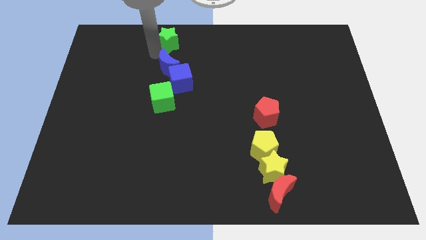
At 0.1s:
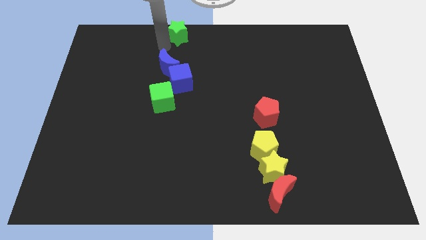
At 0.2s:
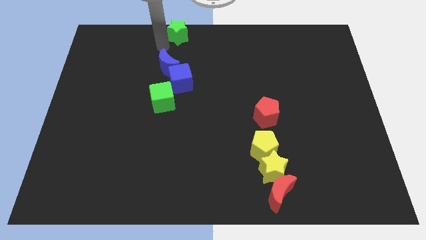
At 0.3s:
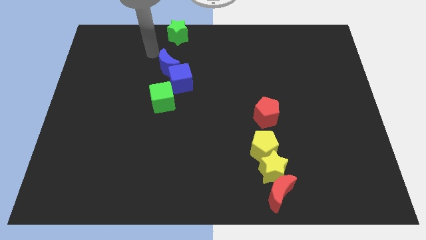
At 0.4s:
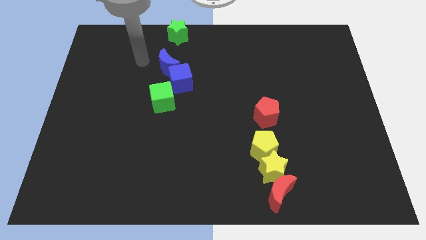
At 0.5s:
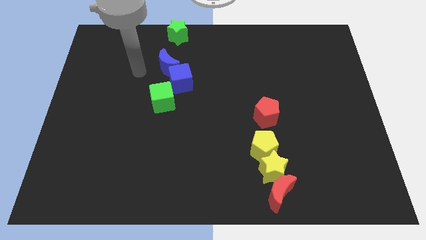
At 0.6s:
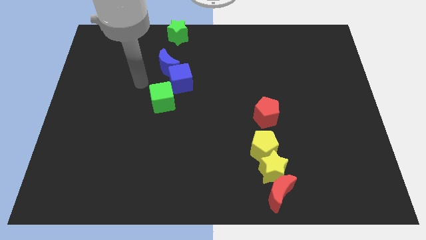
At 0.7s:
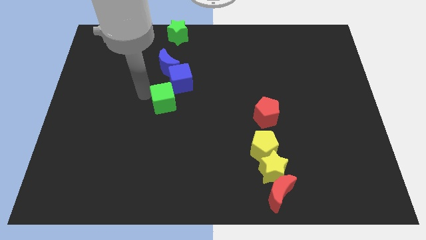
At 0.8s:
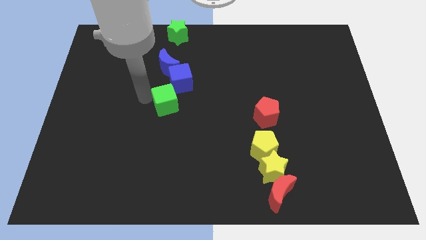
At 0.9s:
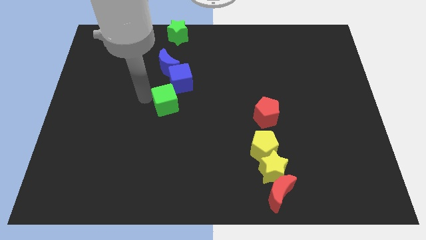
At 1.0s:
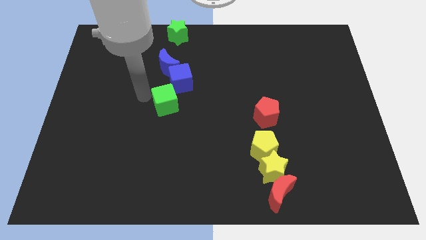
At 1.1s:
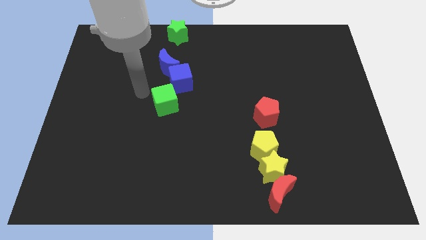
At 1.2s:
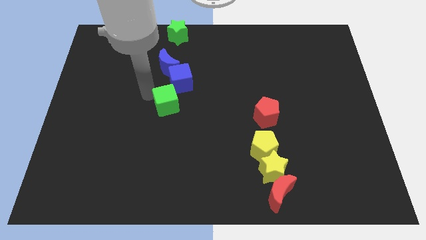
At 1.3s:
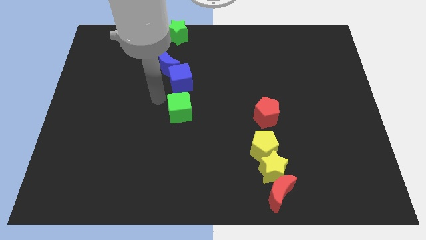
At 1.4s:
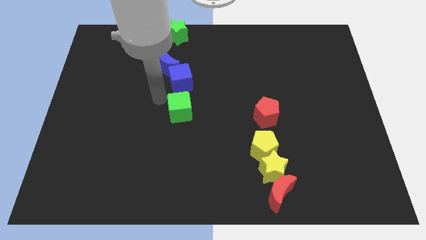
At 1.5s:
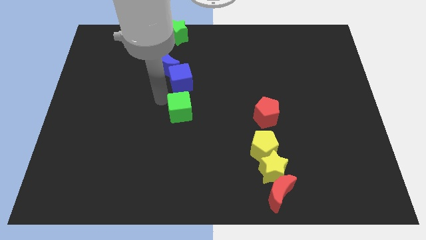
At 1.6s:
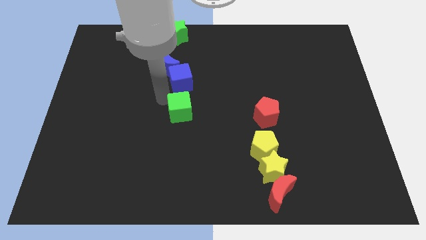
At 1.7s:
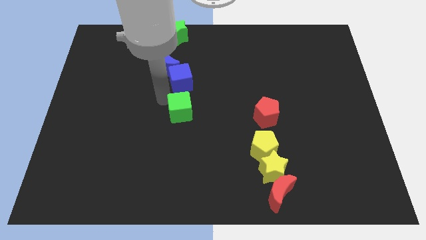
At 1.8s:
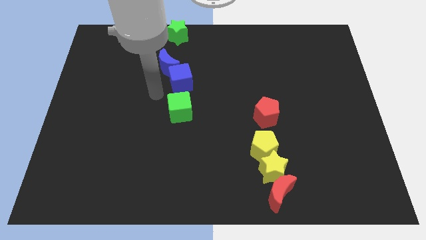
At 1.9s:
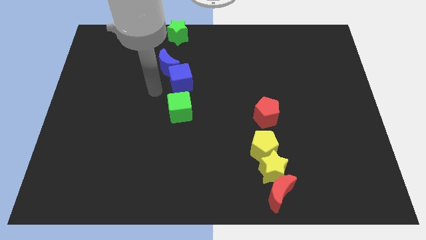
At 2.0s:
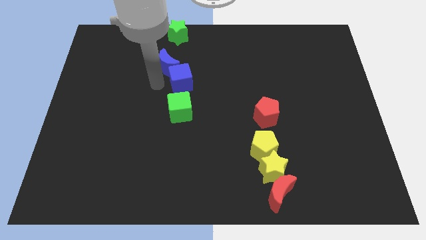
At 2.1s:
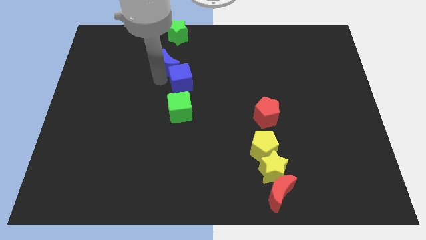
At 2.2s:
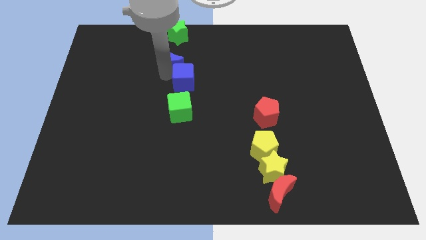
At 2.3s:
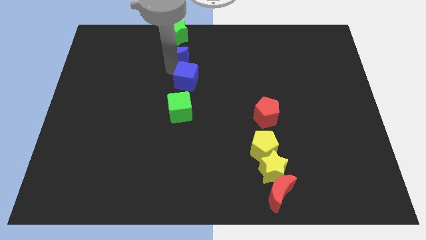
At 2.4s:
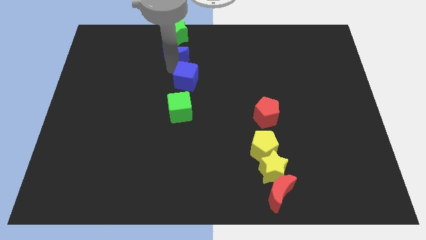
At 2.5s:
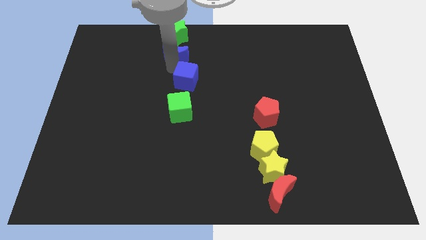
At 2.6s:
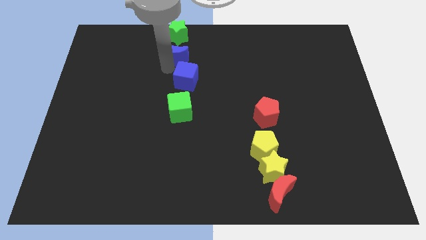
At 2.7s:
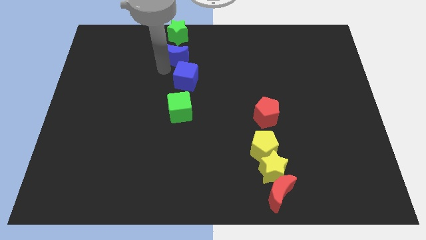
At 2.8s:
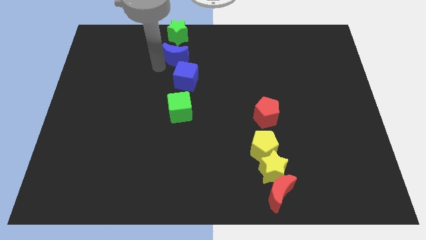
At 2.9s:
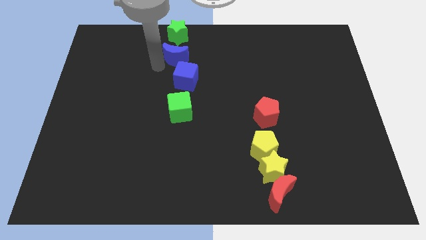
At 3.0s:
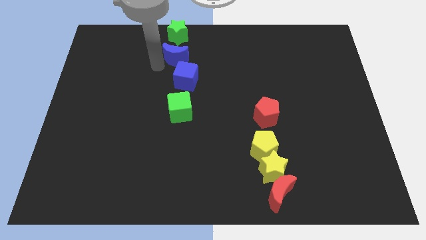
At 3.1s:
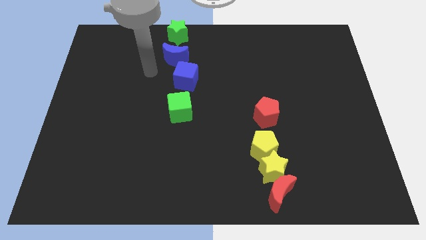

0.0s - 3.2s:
move the green cube parallel to the left of the red pentagon

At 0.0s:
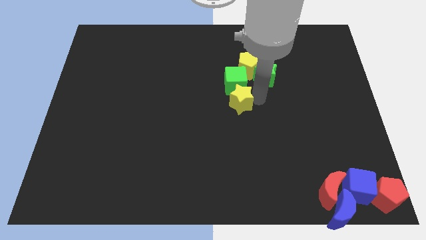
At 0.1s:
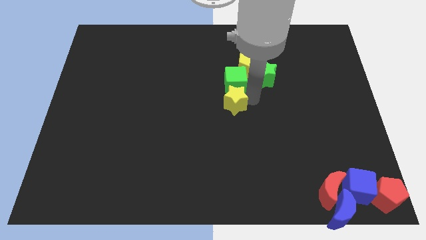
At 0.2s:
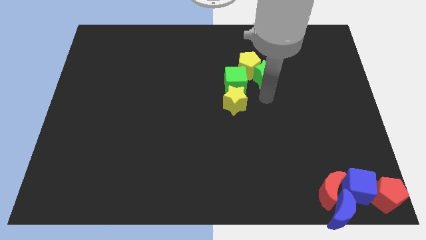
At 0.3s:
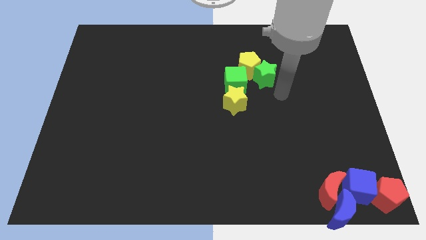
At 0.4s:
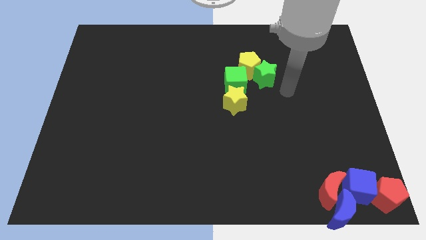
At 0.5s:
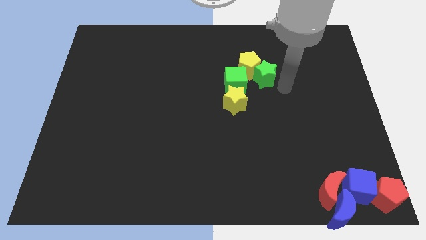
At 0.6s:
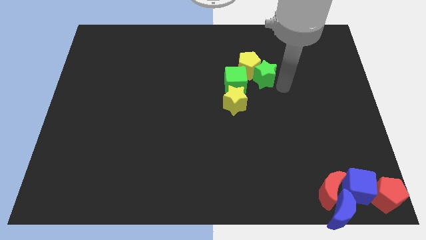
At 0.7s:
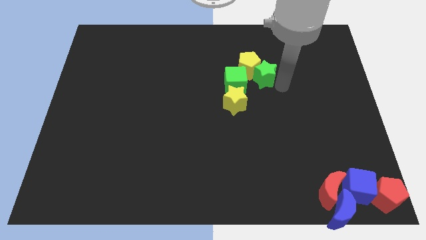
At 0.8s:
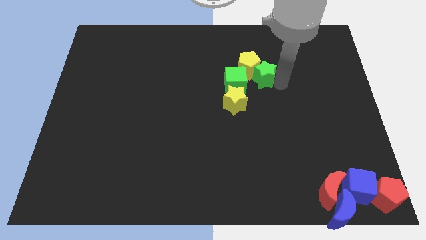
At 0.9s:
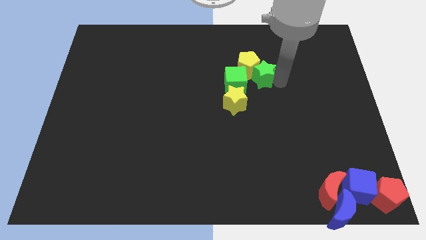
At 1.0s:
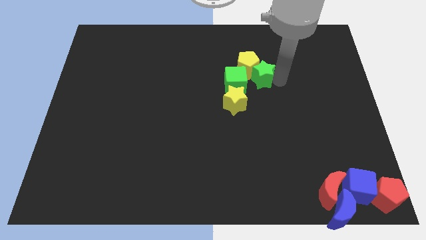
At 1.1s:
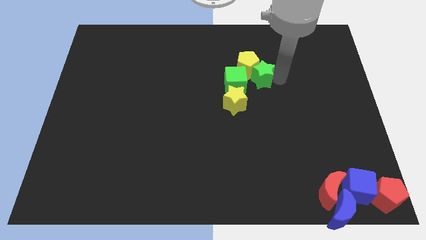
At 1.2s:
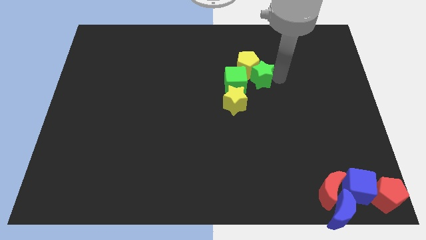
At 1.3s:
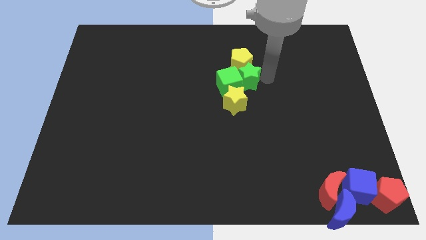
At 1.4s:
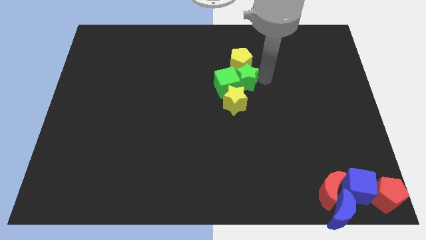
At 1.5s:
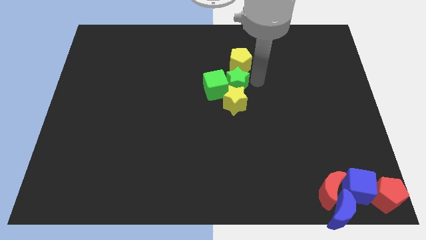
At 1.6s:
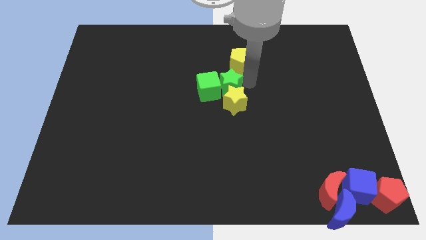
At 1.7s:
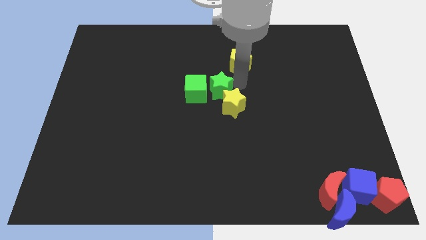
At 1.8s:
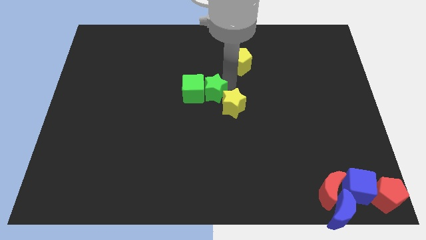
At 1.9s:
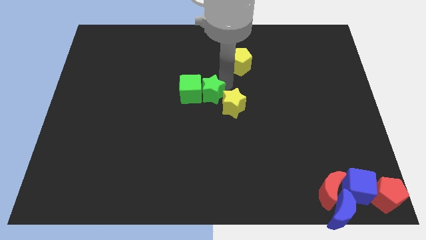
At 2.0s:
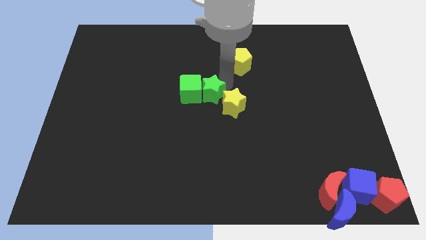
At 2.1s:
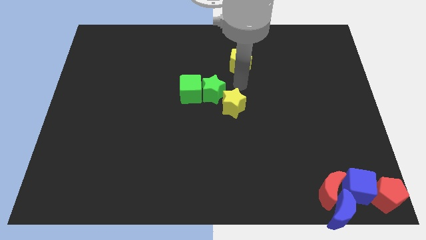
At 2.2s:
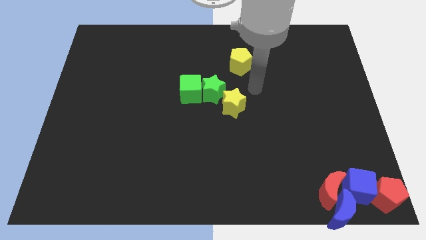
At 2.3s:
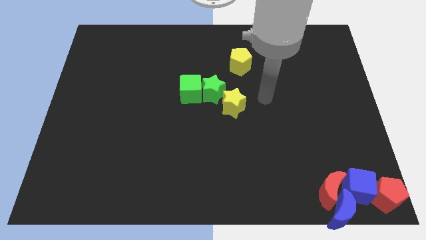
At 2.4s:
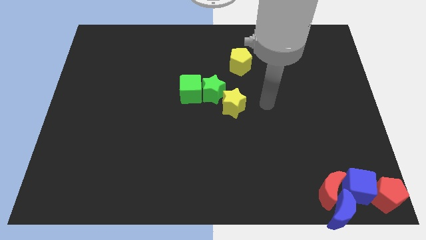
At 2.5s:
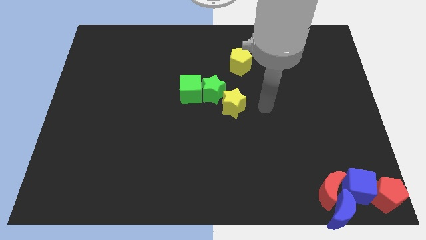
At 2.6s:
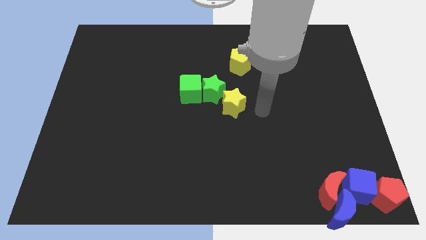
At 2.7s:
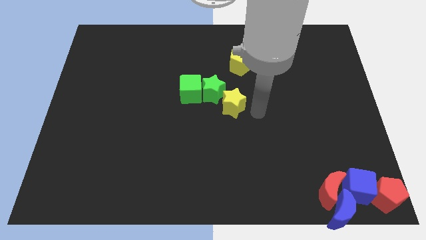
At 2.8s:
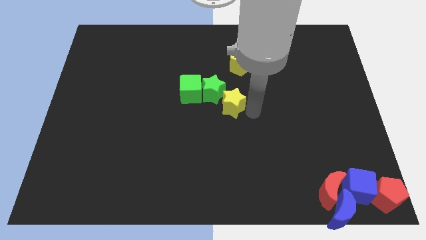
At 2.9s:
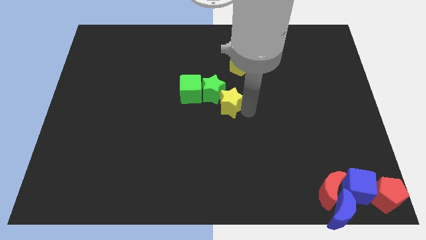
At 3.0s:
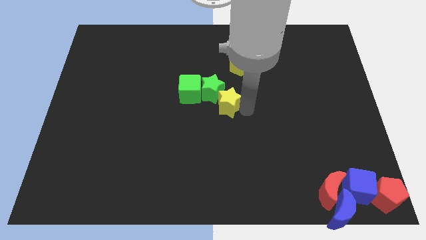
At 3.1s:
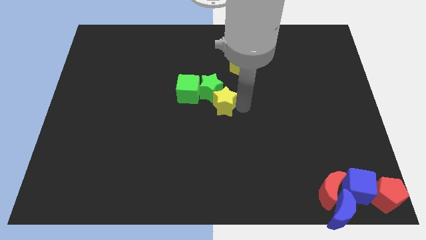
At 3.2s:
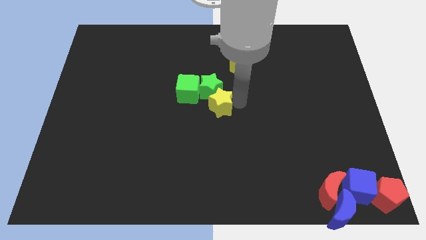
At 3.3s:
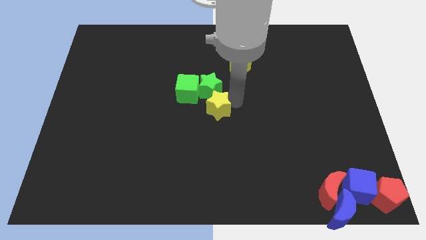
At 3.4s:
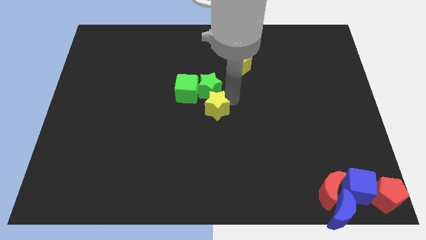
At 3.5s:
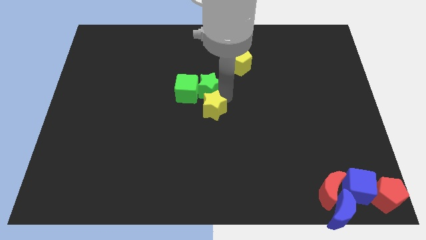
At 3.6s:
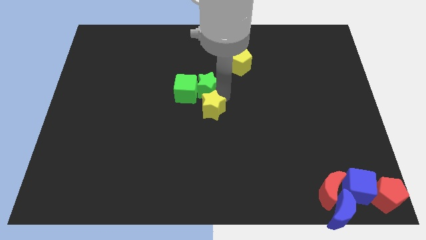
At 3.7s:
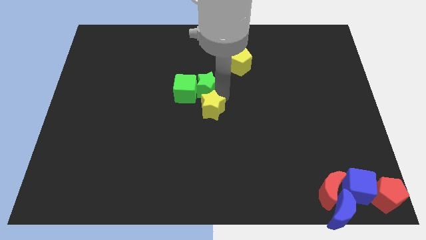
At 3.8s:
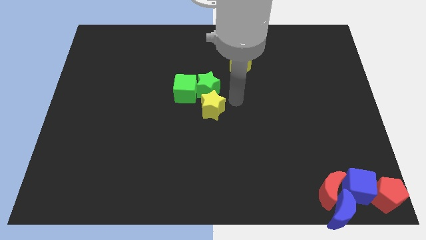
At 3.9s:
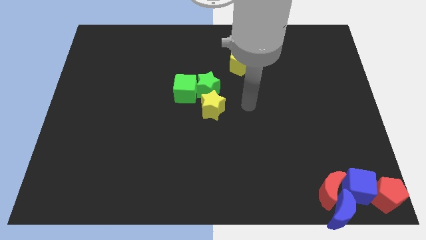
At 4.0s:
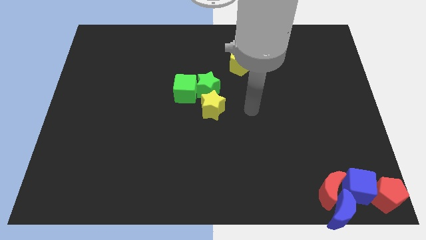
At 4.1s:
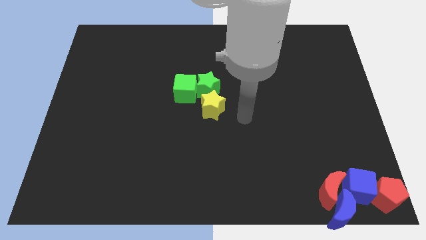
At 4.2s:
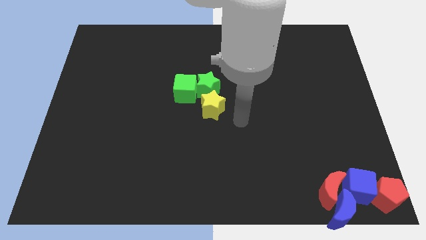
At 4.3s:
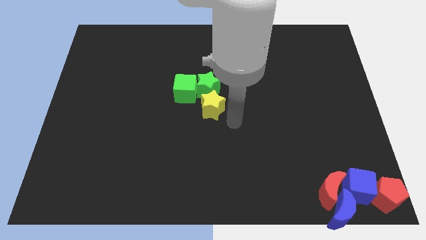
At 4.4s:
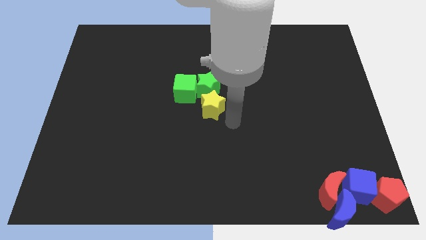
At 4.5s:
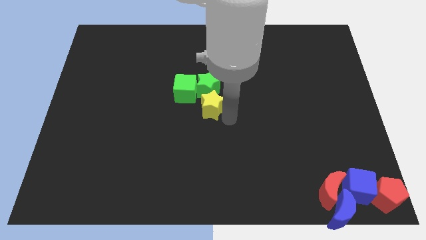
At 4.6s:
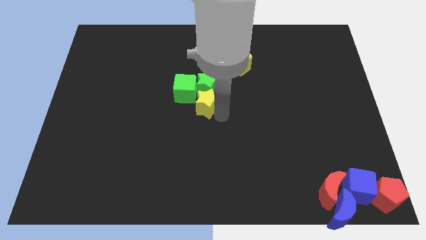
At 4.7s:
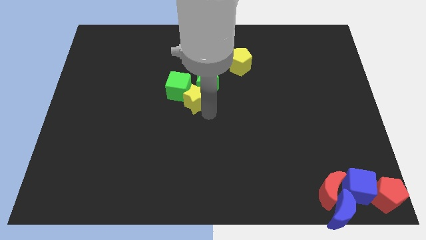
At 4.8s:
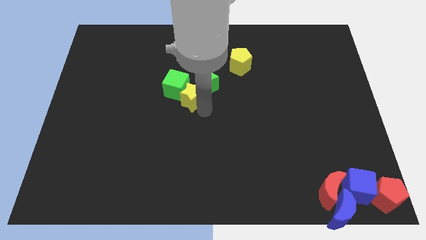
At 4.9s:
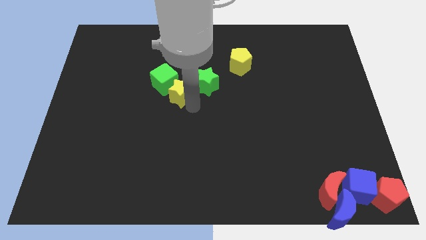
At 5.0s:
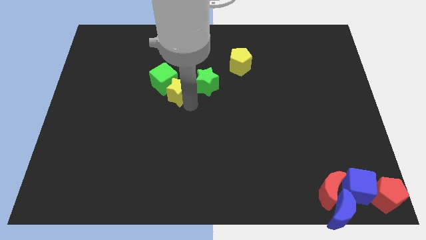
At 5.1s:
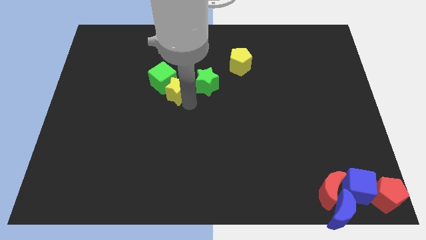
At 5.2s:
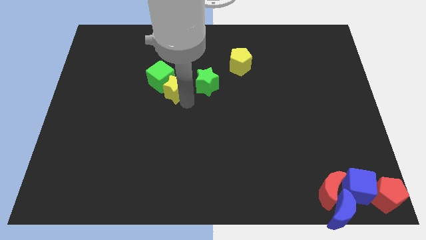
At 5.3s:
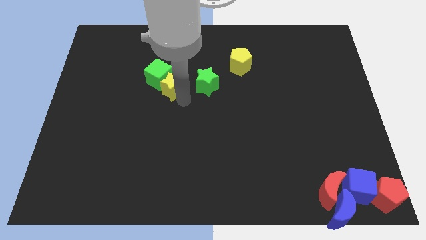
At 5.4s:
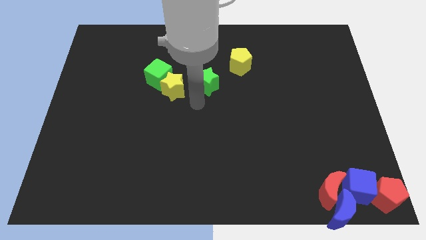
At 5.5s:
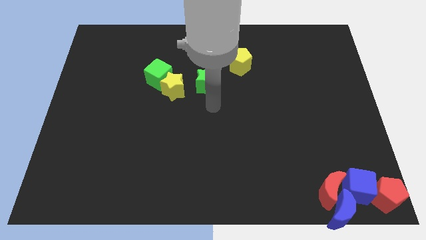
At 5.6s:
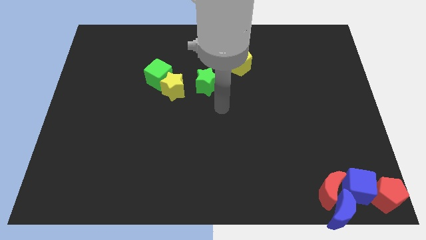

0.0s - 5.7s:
push a group of blocks to the left side of the board

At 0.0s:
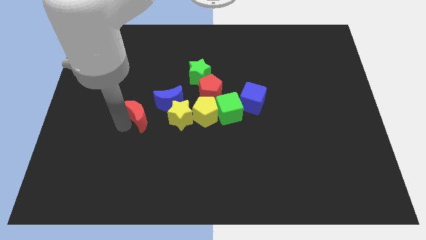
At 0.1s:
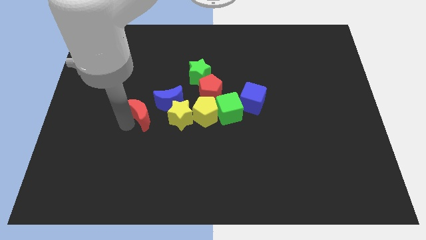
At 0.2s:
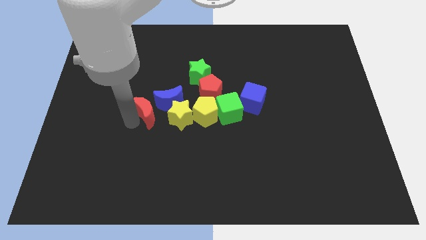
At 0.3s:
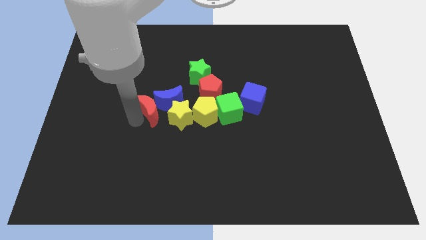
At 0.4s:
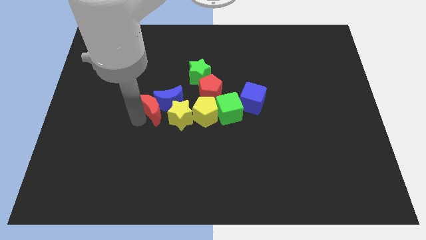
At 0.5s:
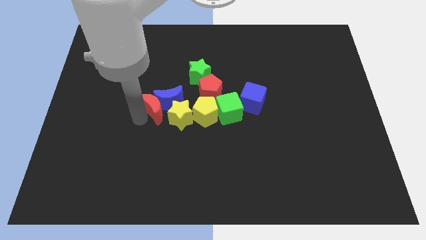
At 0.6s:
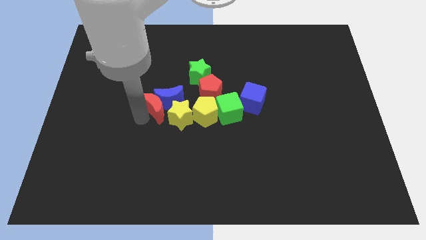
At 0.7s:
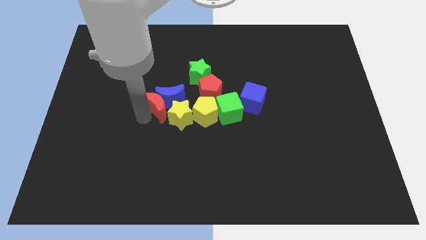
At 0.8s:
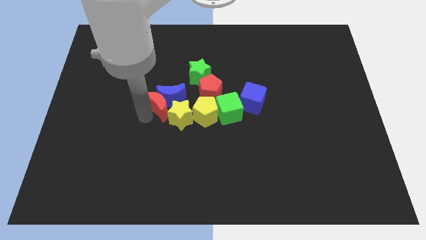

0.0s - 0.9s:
push the red crescent into the blue crescent
